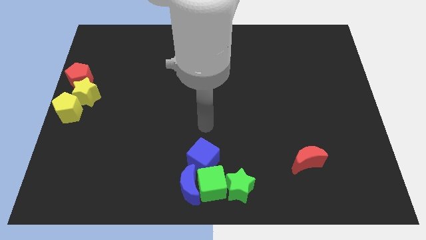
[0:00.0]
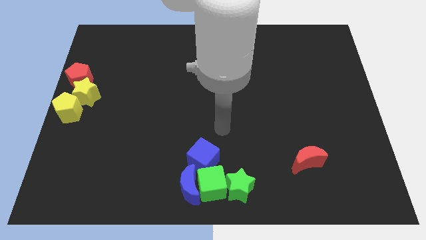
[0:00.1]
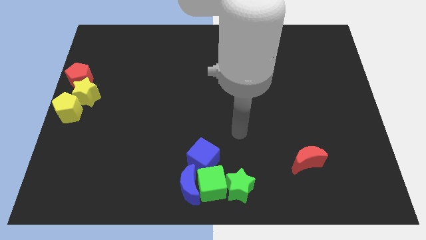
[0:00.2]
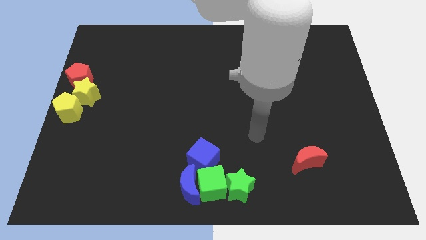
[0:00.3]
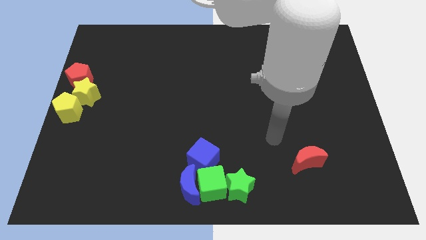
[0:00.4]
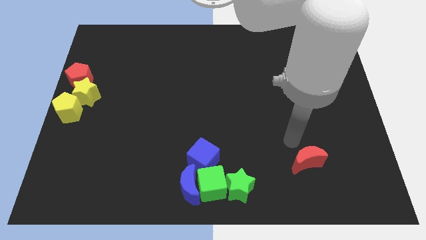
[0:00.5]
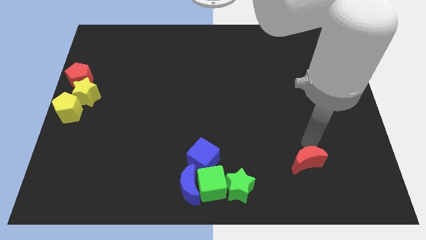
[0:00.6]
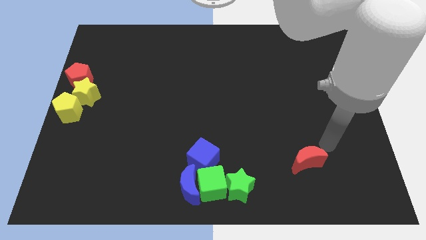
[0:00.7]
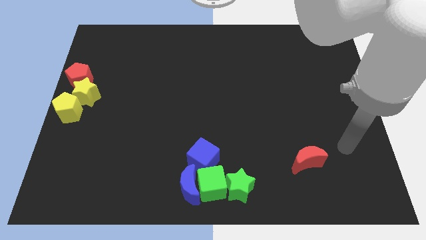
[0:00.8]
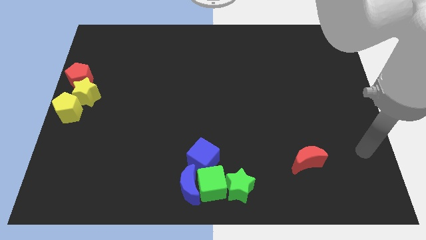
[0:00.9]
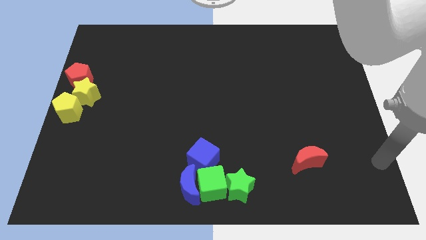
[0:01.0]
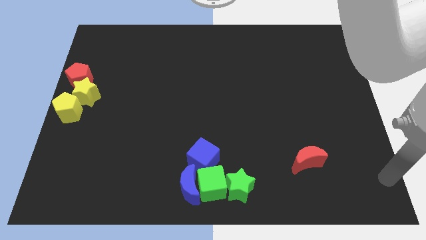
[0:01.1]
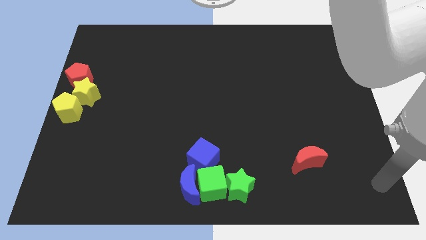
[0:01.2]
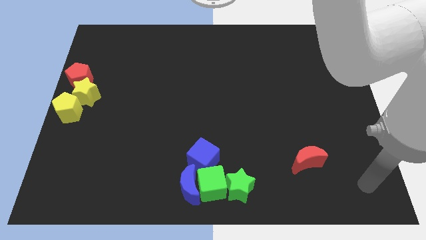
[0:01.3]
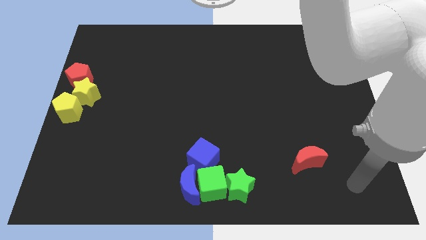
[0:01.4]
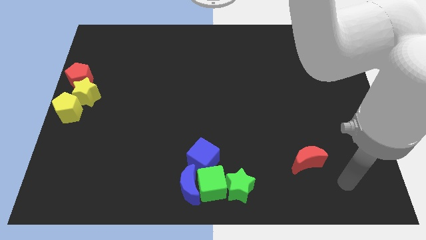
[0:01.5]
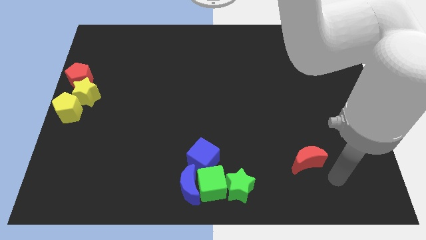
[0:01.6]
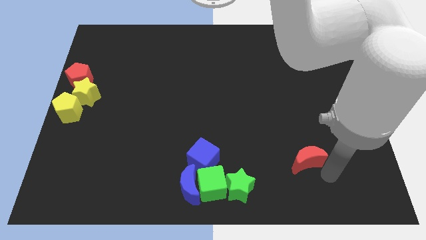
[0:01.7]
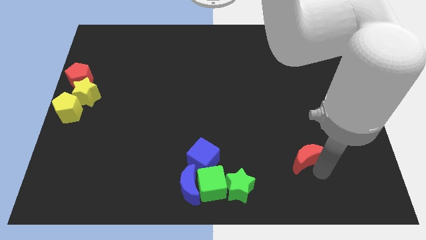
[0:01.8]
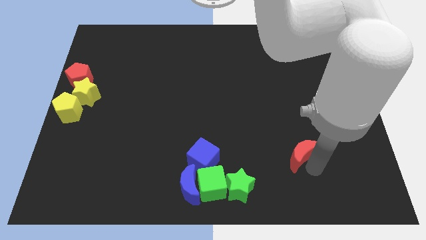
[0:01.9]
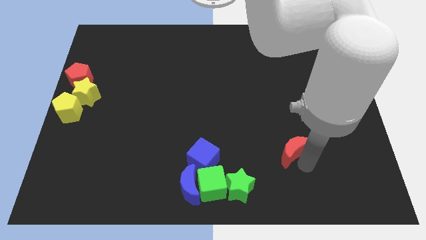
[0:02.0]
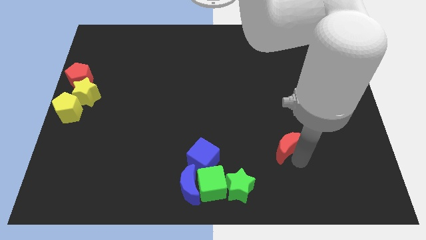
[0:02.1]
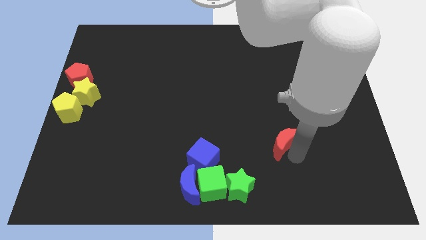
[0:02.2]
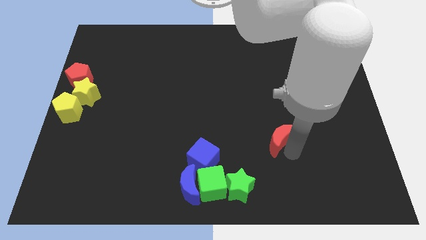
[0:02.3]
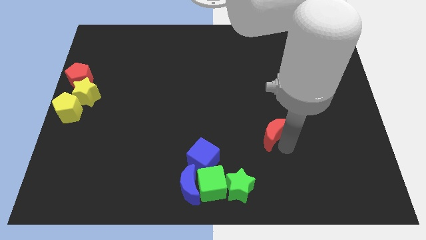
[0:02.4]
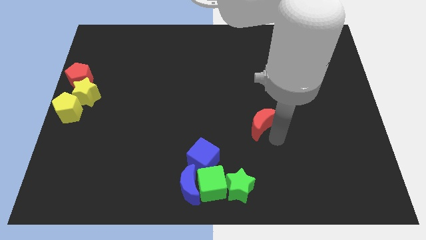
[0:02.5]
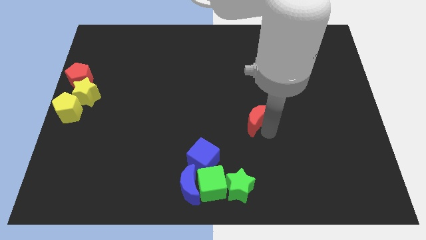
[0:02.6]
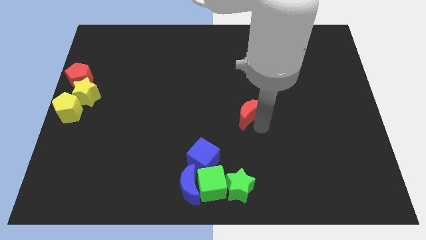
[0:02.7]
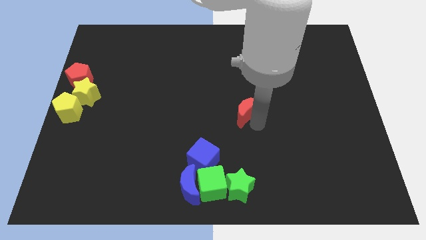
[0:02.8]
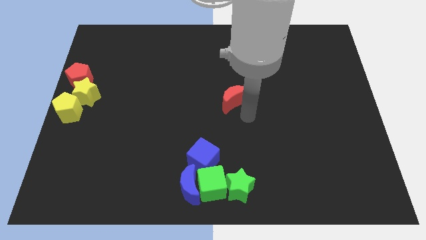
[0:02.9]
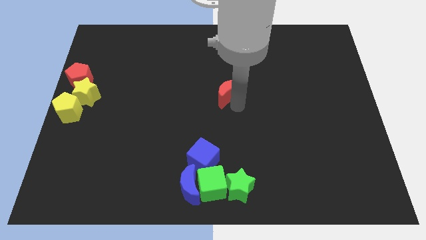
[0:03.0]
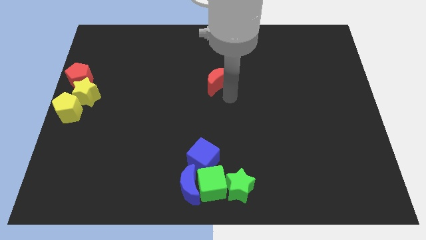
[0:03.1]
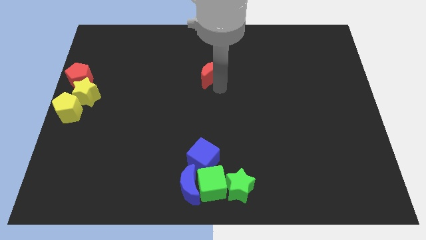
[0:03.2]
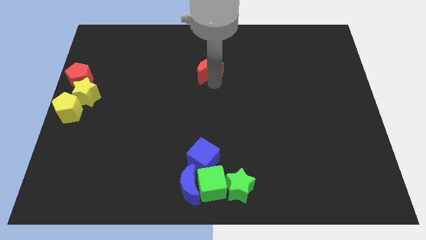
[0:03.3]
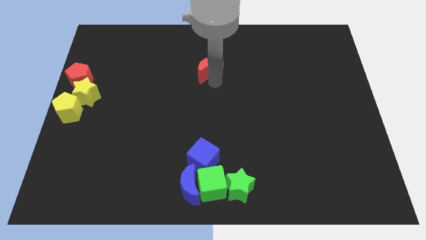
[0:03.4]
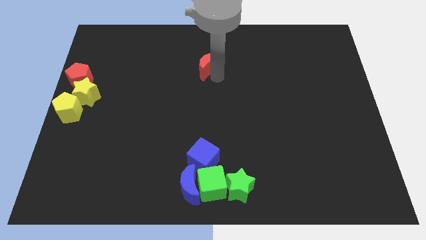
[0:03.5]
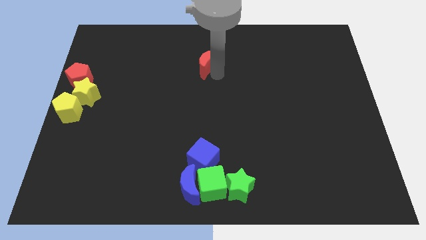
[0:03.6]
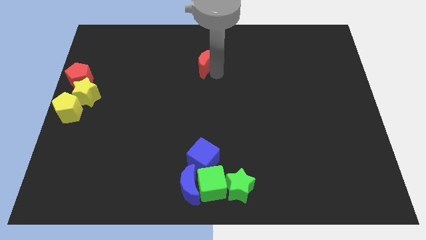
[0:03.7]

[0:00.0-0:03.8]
drag the red moon vertically above the blue cube

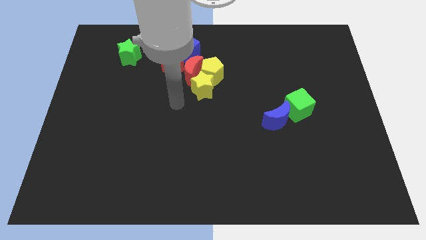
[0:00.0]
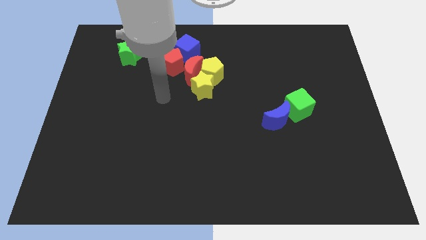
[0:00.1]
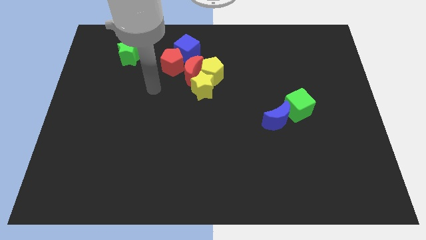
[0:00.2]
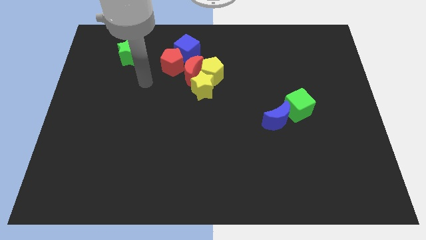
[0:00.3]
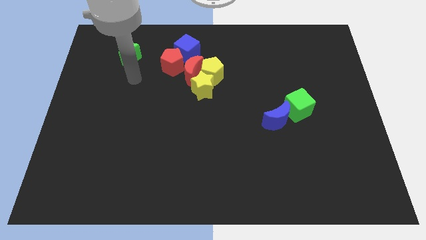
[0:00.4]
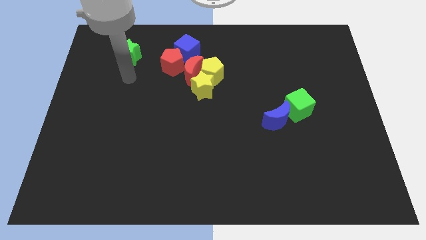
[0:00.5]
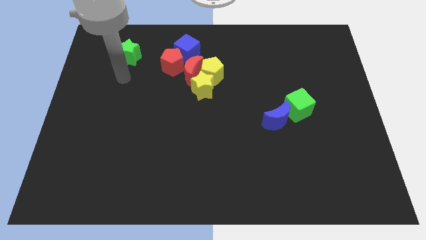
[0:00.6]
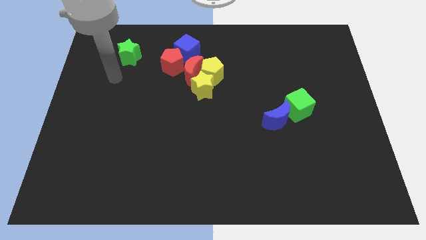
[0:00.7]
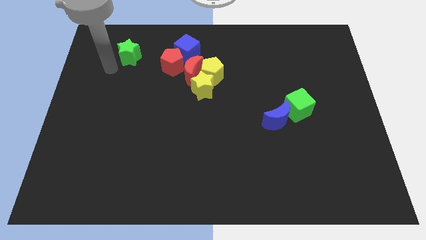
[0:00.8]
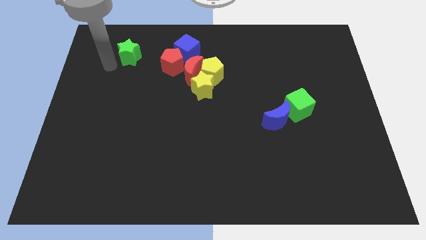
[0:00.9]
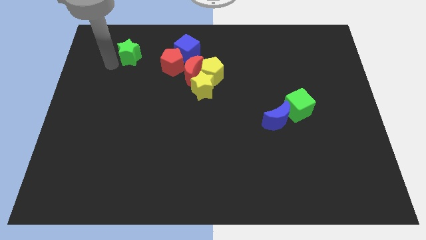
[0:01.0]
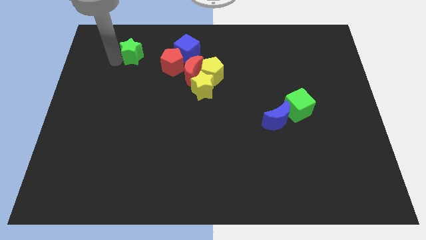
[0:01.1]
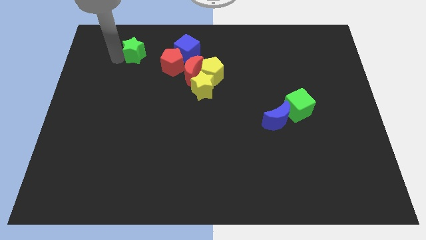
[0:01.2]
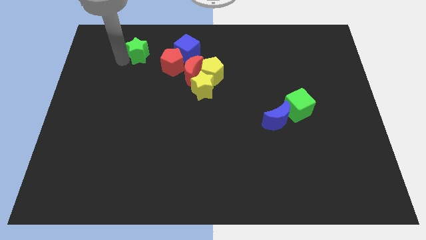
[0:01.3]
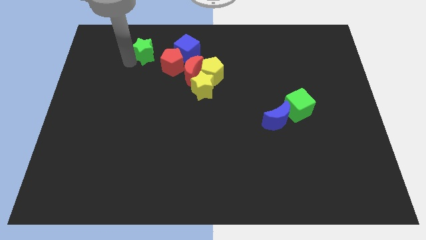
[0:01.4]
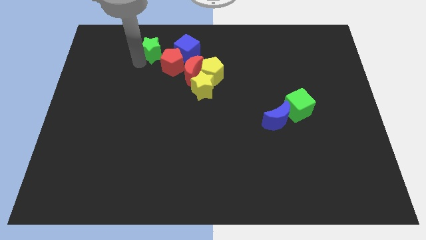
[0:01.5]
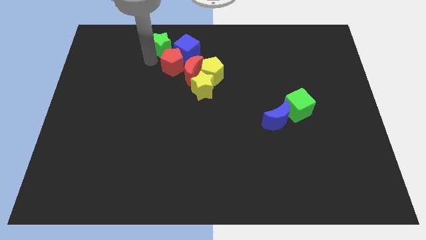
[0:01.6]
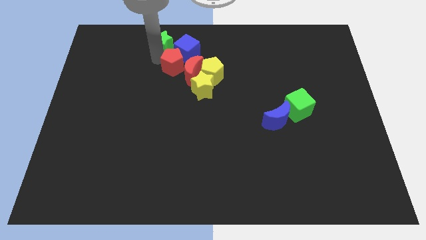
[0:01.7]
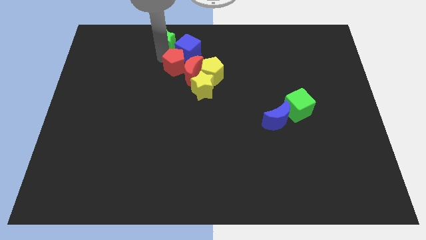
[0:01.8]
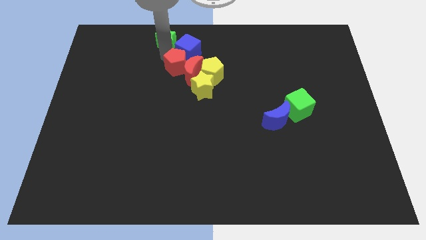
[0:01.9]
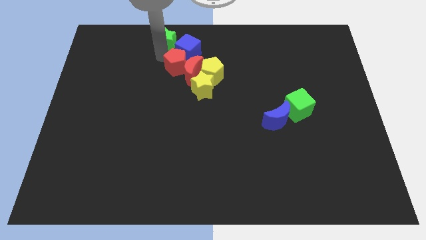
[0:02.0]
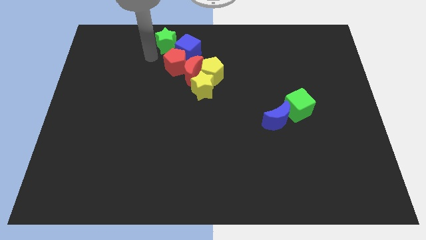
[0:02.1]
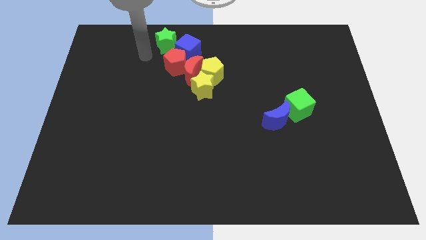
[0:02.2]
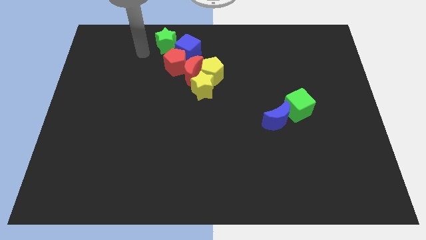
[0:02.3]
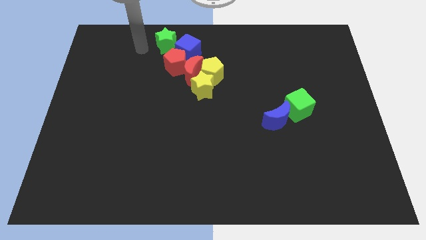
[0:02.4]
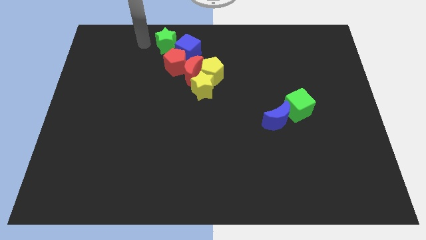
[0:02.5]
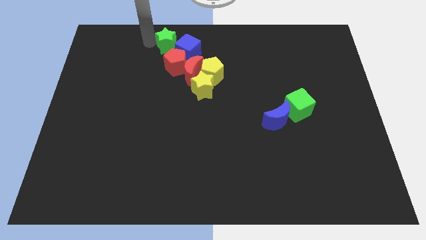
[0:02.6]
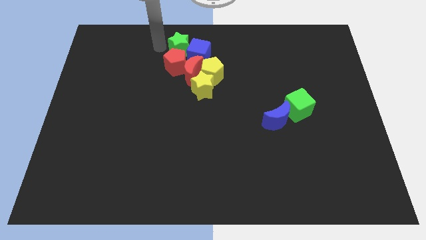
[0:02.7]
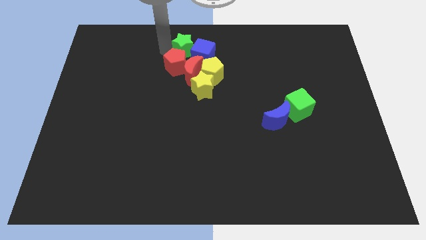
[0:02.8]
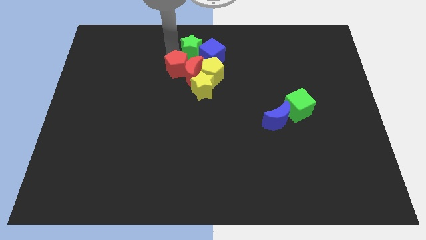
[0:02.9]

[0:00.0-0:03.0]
push the green star into the group of blocks

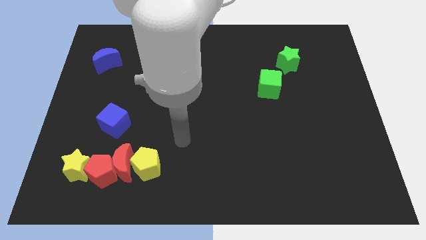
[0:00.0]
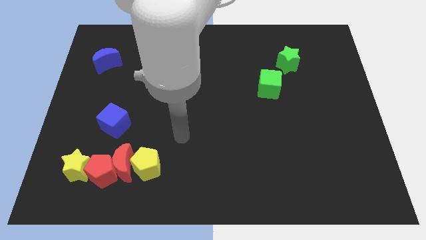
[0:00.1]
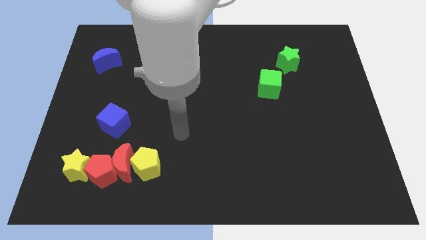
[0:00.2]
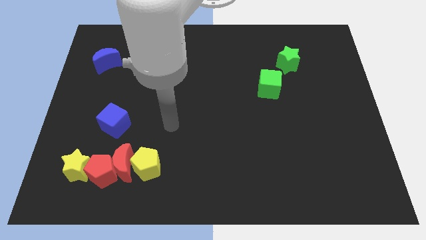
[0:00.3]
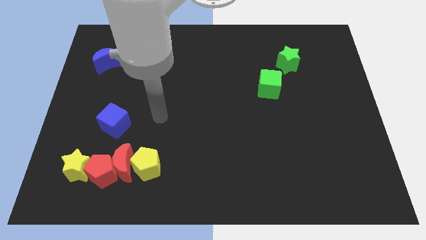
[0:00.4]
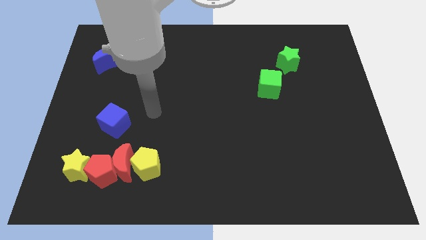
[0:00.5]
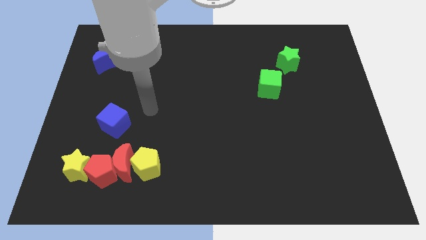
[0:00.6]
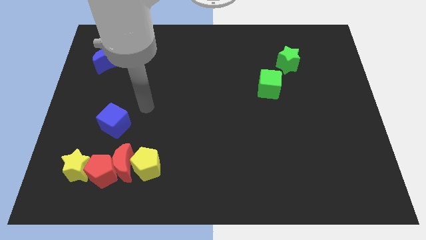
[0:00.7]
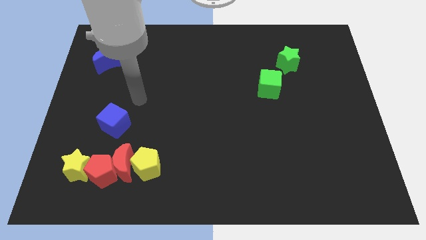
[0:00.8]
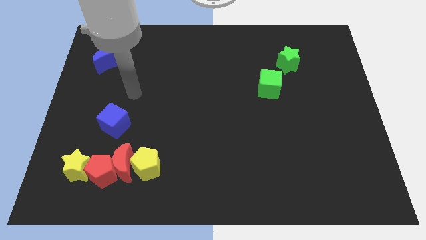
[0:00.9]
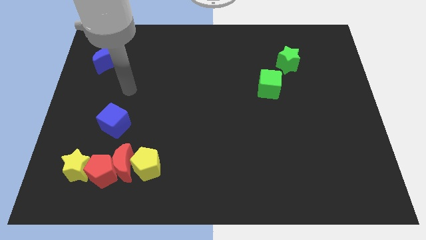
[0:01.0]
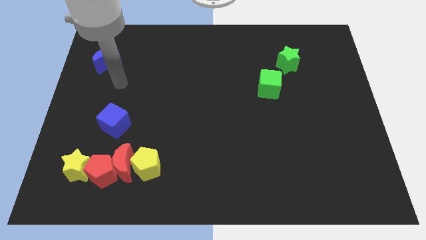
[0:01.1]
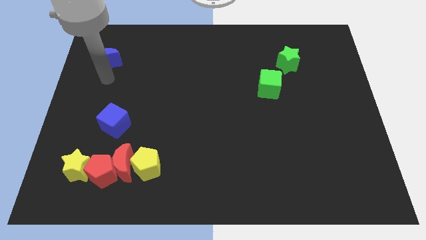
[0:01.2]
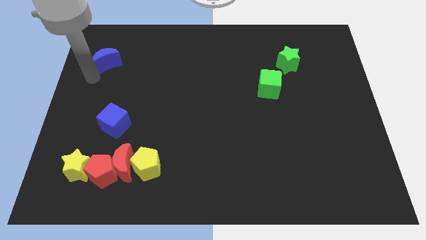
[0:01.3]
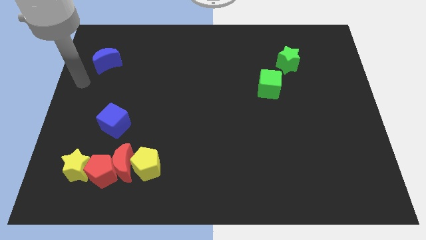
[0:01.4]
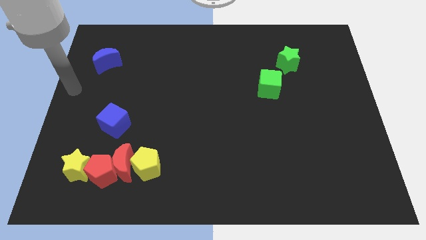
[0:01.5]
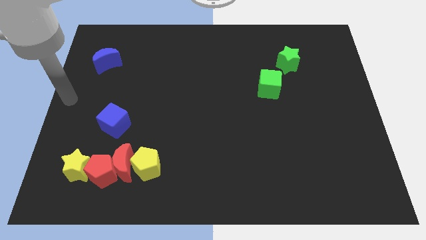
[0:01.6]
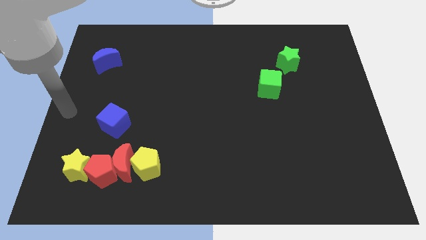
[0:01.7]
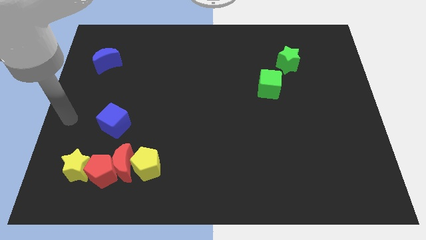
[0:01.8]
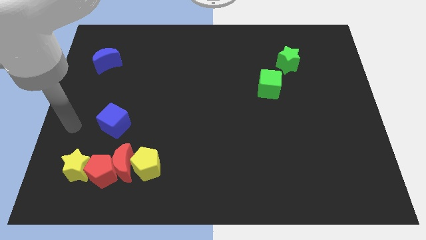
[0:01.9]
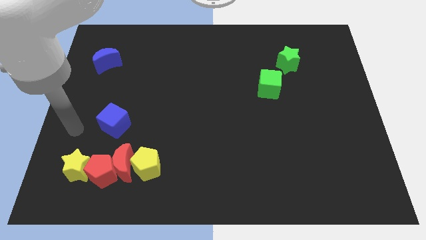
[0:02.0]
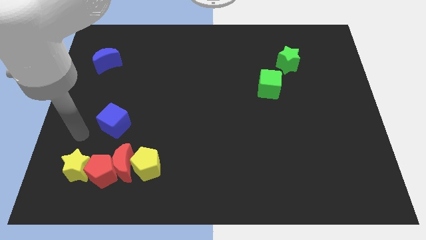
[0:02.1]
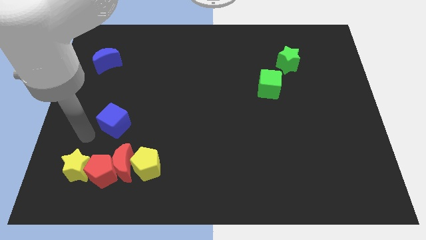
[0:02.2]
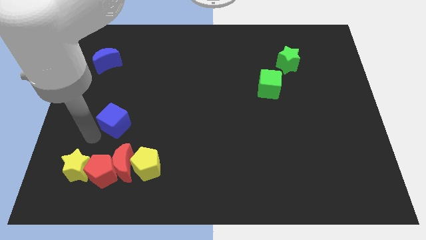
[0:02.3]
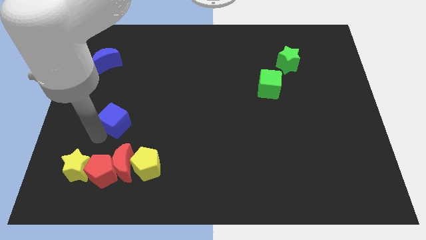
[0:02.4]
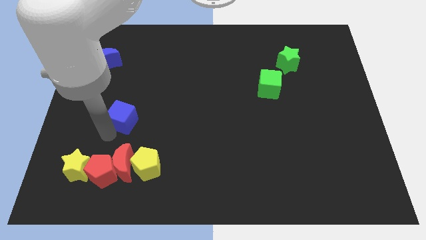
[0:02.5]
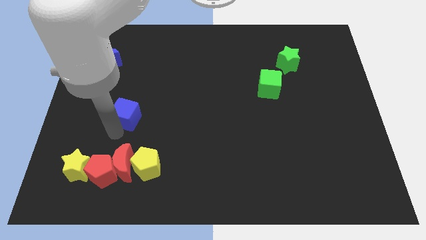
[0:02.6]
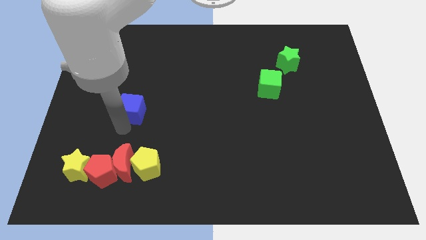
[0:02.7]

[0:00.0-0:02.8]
push the blue cube to the top of the red crescent
